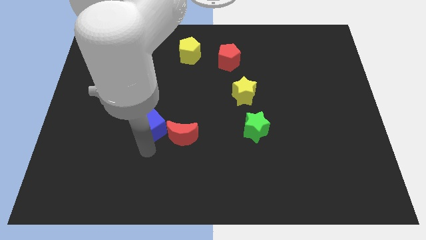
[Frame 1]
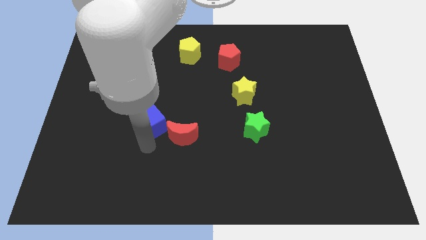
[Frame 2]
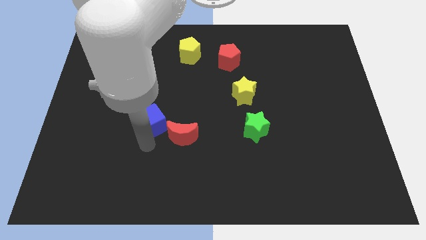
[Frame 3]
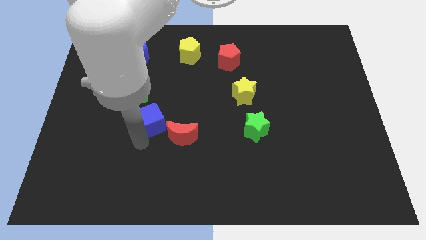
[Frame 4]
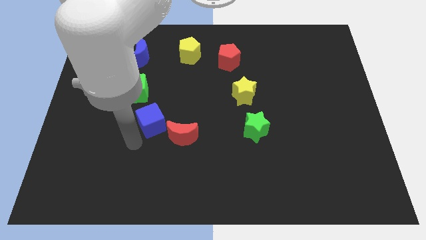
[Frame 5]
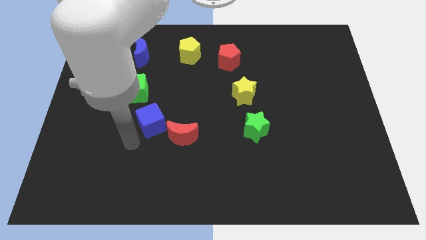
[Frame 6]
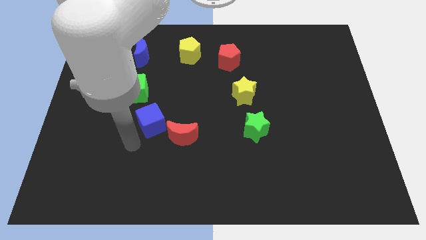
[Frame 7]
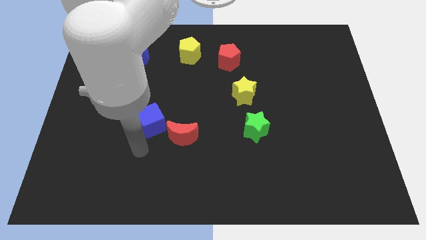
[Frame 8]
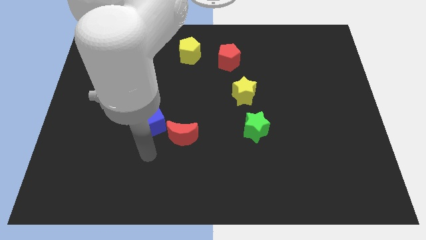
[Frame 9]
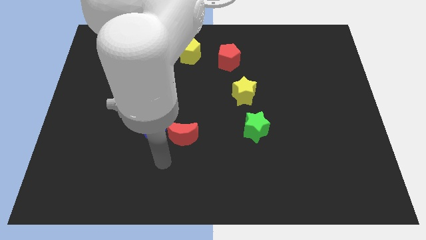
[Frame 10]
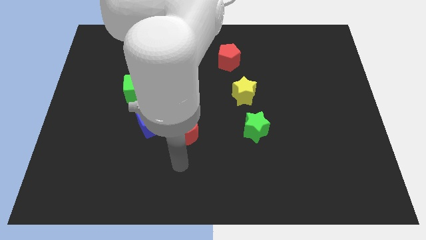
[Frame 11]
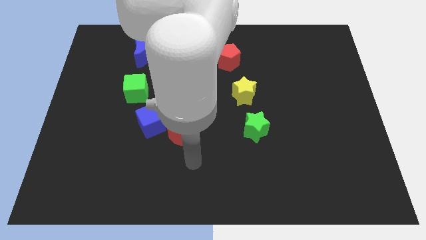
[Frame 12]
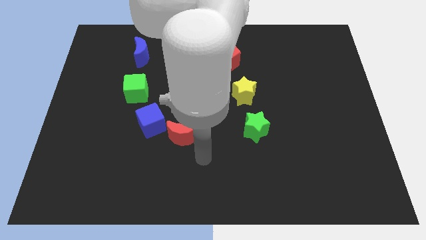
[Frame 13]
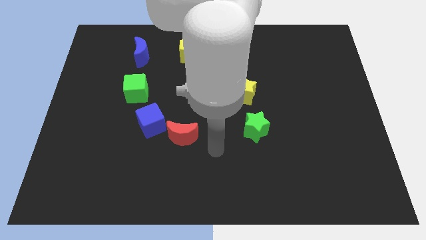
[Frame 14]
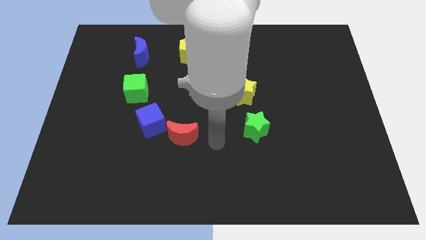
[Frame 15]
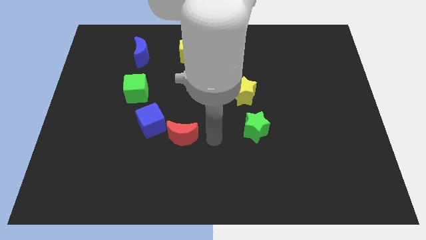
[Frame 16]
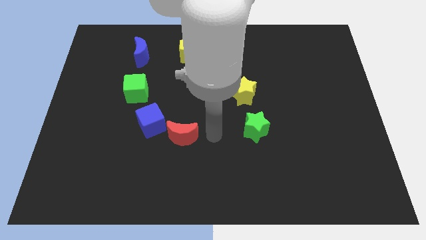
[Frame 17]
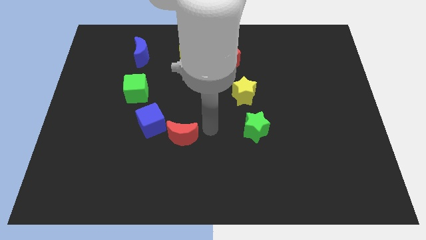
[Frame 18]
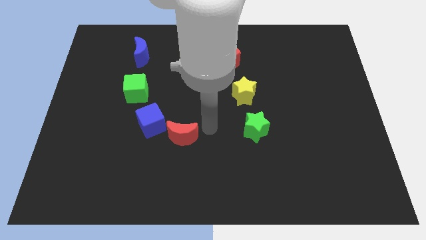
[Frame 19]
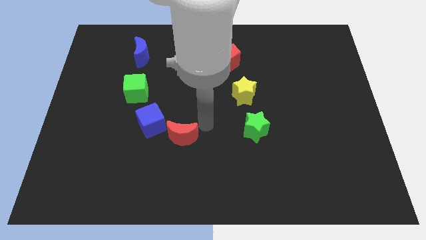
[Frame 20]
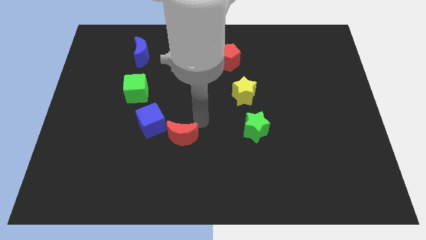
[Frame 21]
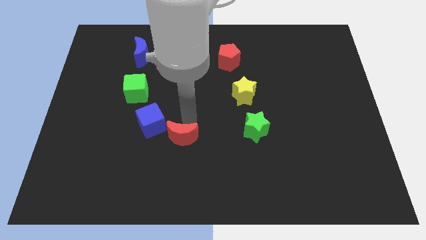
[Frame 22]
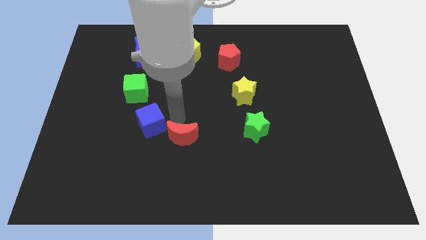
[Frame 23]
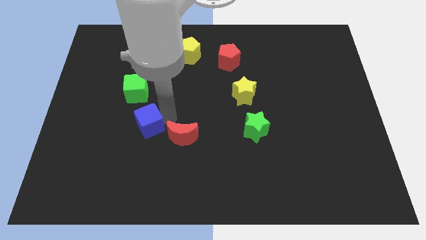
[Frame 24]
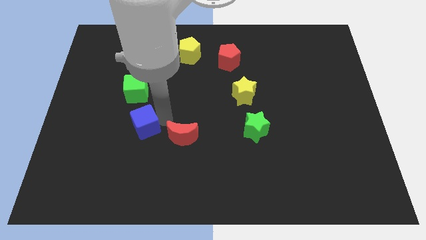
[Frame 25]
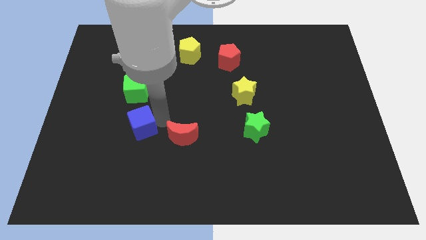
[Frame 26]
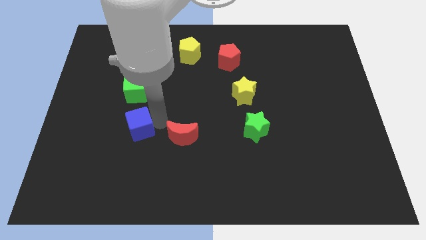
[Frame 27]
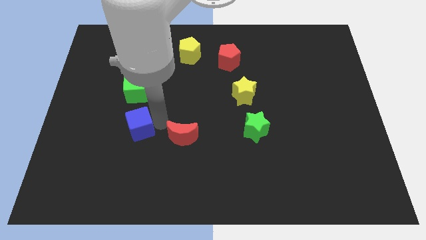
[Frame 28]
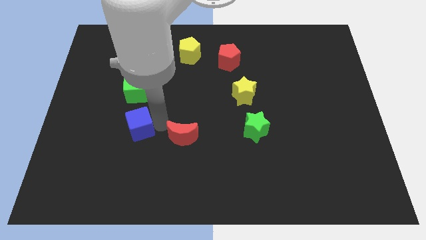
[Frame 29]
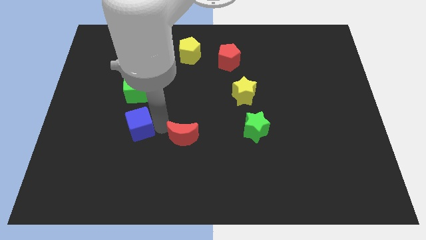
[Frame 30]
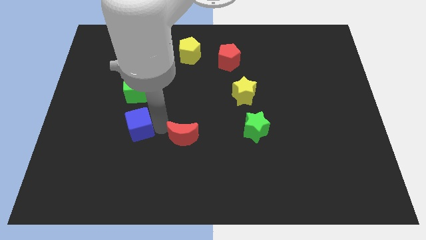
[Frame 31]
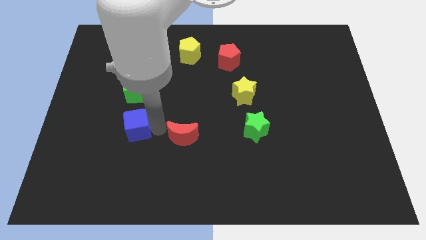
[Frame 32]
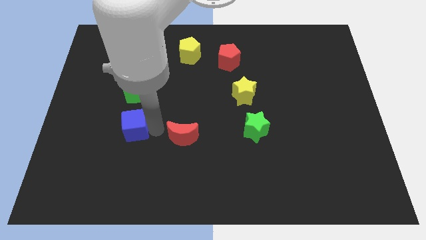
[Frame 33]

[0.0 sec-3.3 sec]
place the blue cube down to the green cube

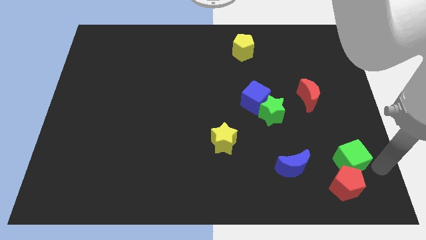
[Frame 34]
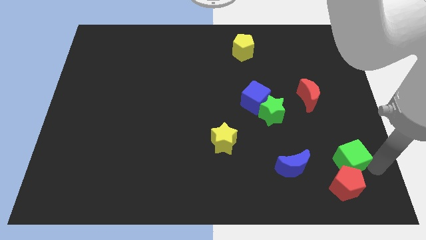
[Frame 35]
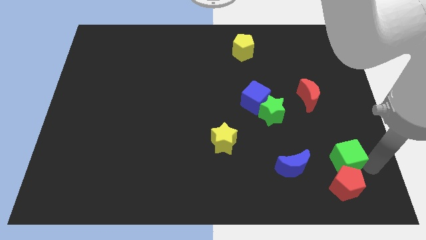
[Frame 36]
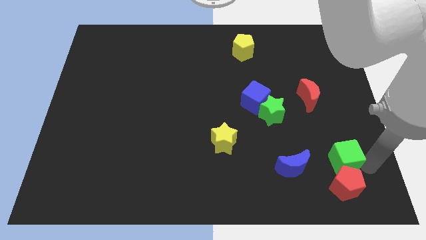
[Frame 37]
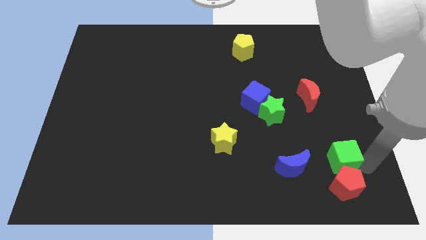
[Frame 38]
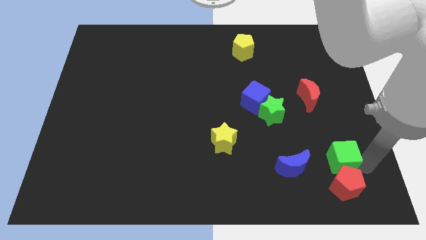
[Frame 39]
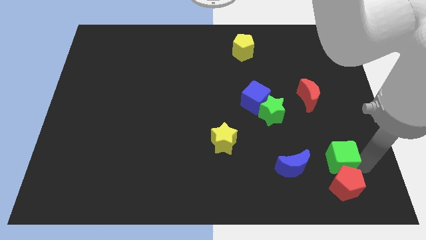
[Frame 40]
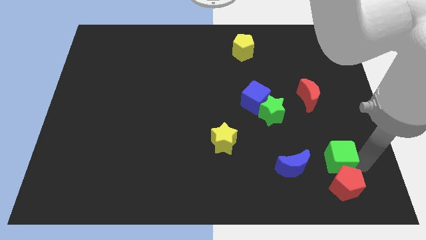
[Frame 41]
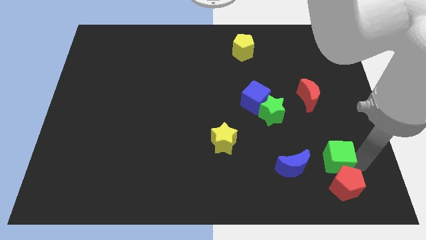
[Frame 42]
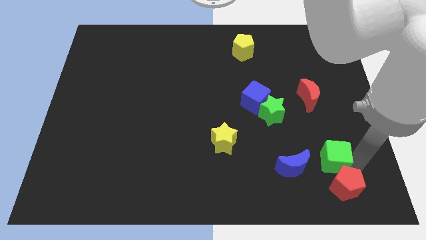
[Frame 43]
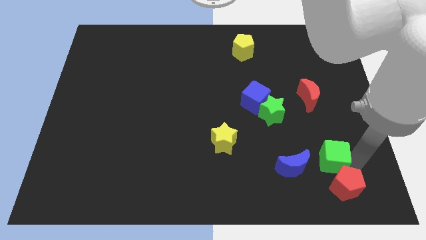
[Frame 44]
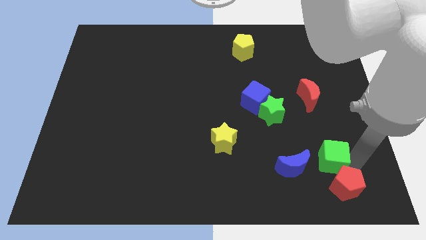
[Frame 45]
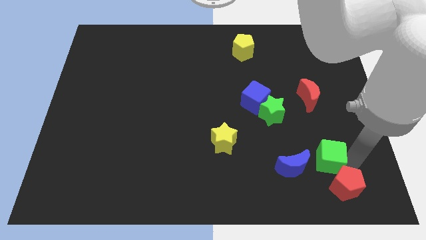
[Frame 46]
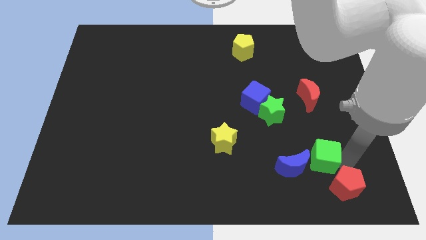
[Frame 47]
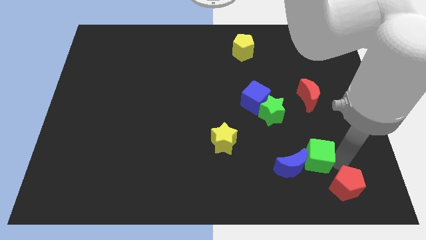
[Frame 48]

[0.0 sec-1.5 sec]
push the green cube into the blue crescent

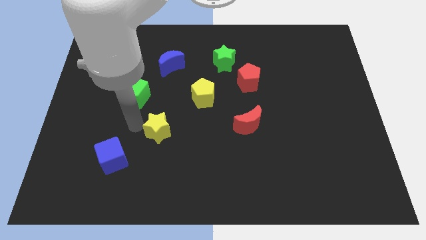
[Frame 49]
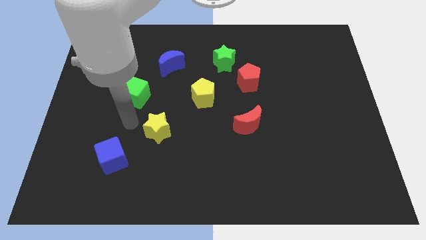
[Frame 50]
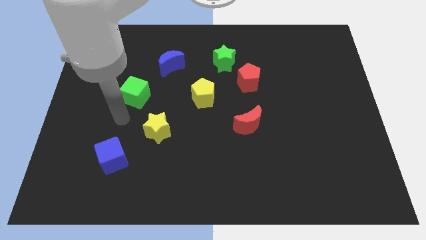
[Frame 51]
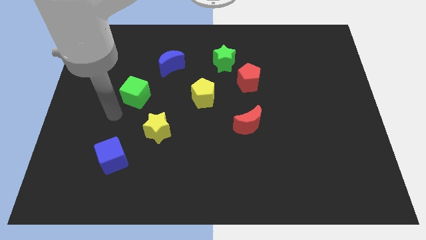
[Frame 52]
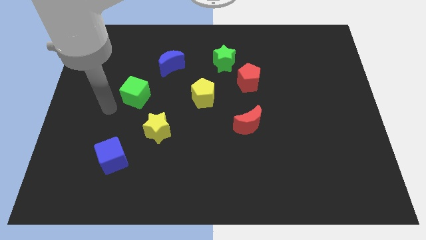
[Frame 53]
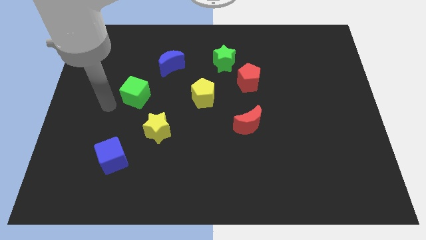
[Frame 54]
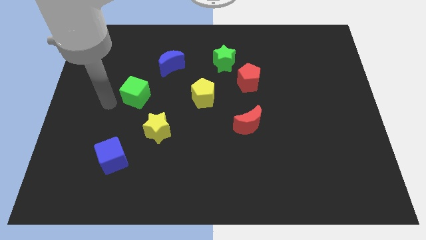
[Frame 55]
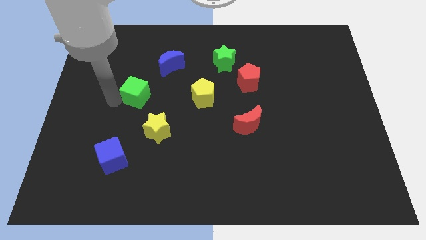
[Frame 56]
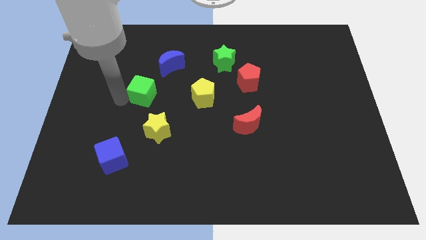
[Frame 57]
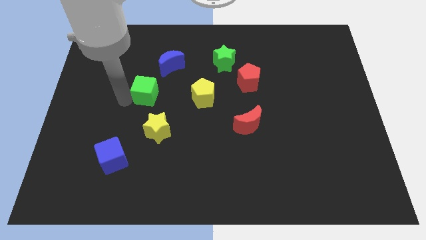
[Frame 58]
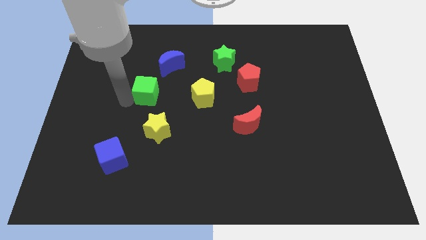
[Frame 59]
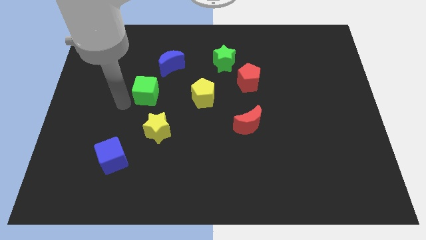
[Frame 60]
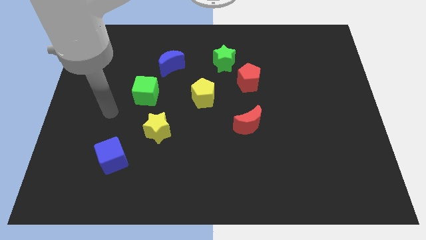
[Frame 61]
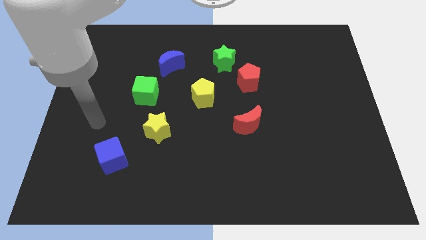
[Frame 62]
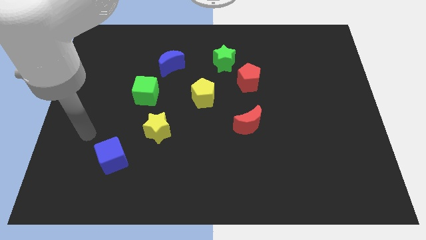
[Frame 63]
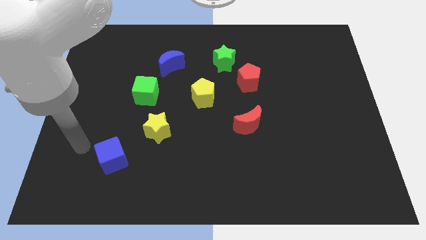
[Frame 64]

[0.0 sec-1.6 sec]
move the green cube slightly to the top

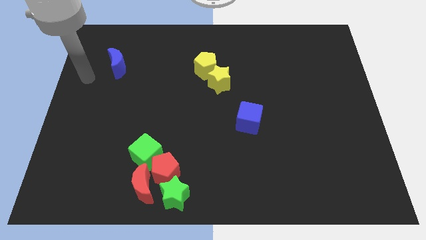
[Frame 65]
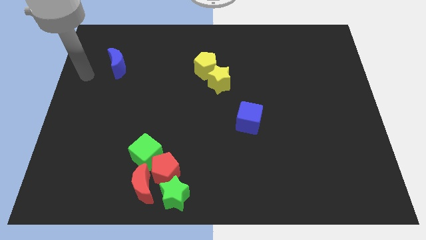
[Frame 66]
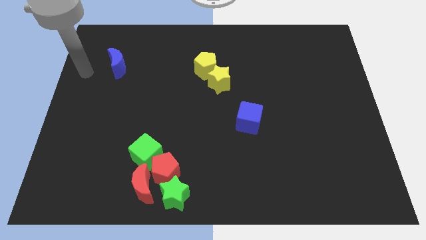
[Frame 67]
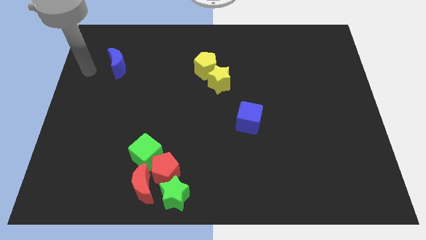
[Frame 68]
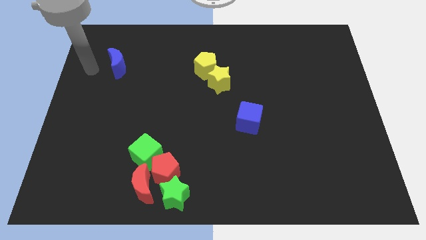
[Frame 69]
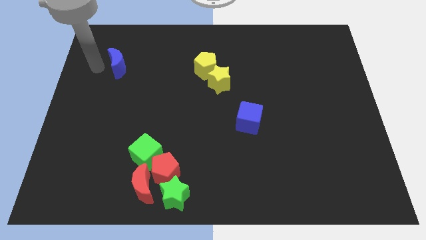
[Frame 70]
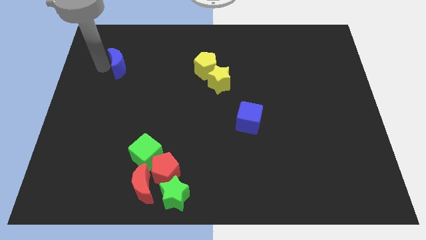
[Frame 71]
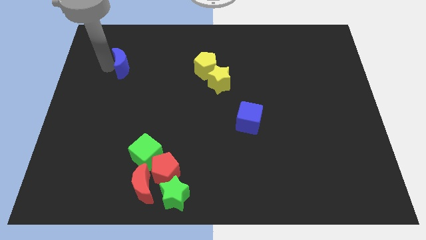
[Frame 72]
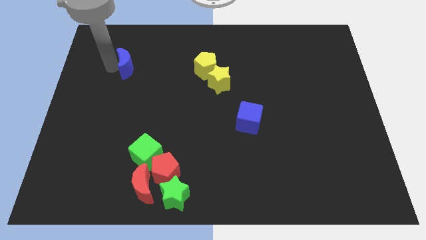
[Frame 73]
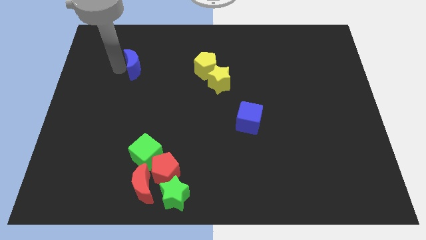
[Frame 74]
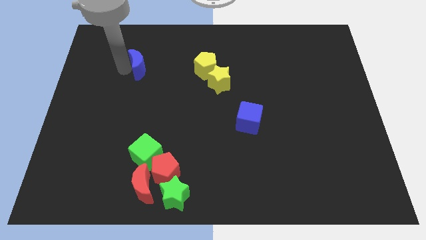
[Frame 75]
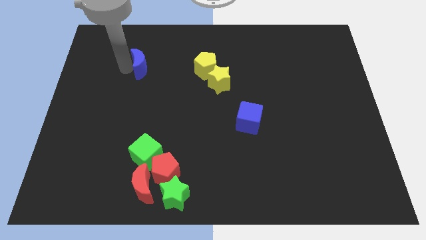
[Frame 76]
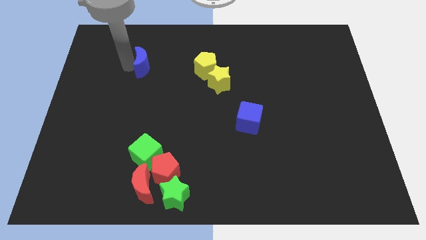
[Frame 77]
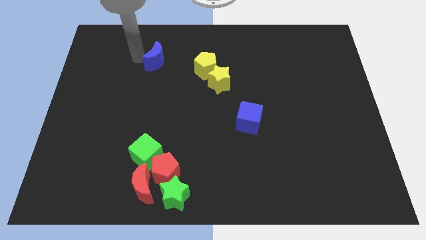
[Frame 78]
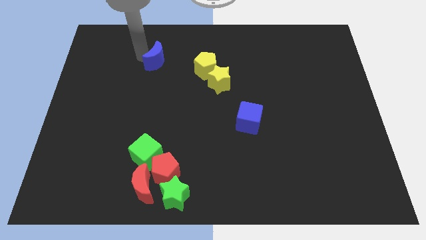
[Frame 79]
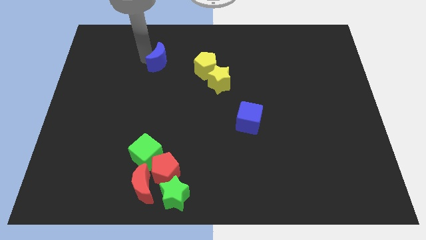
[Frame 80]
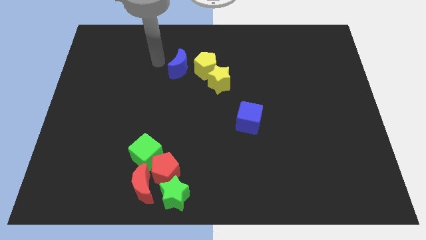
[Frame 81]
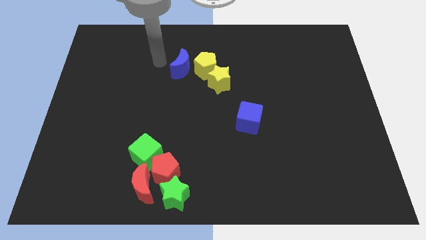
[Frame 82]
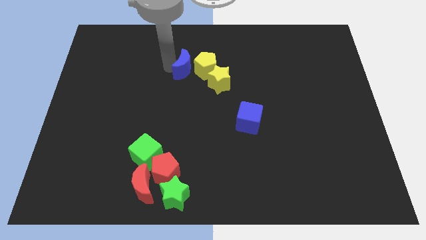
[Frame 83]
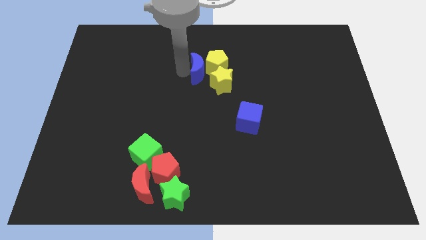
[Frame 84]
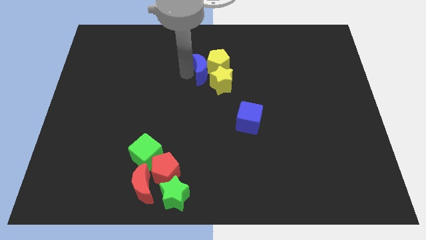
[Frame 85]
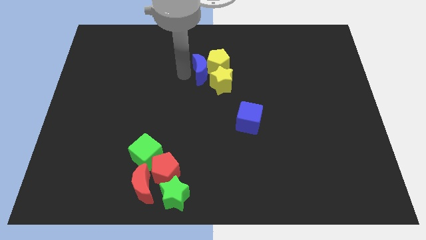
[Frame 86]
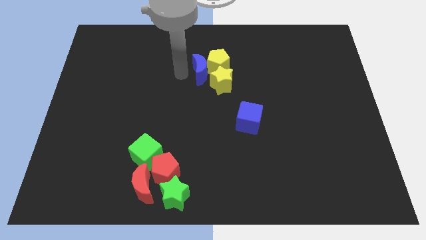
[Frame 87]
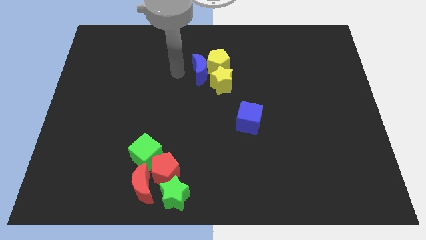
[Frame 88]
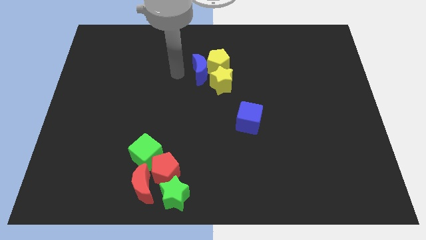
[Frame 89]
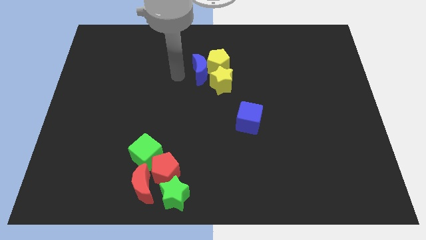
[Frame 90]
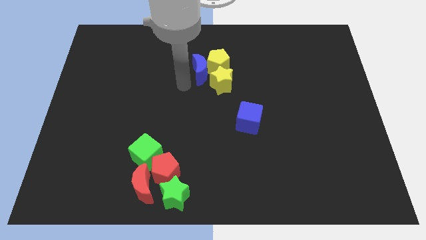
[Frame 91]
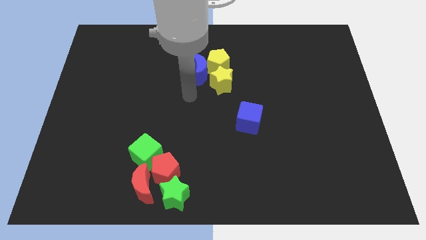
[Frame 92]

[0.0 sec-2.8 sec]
push the blue moon into the yellow pentagon
